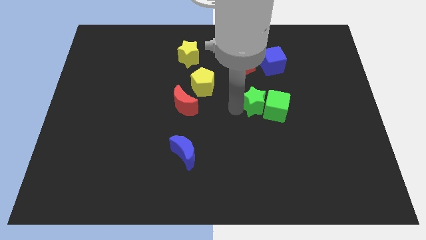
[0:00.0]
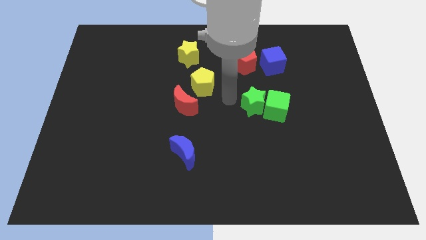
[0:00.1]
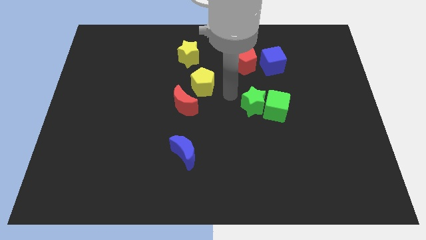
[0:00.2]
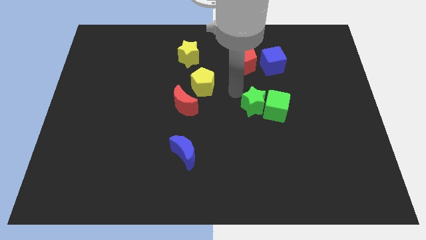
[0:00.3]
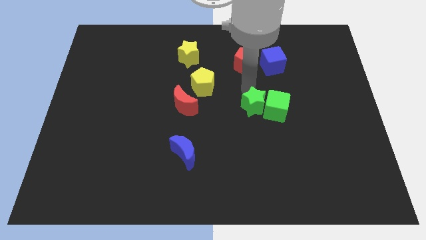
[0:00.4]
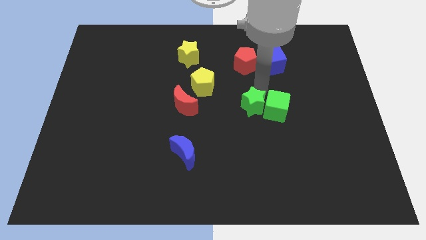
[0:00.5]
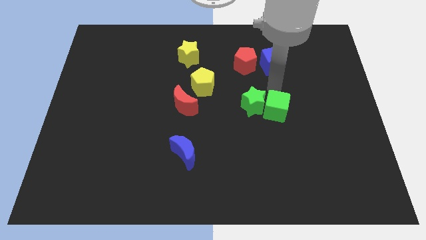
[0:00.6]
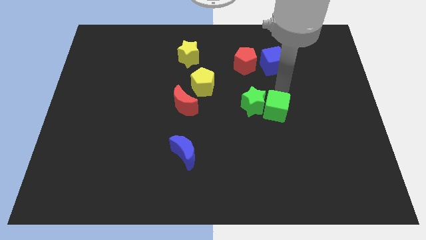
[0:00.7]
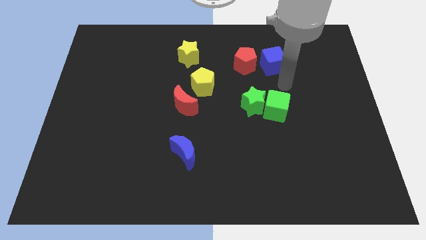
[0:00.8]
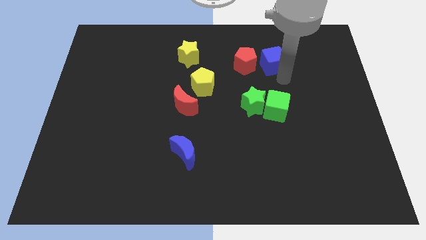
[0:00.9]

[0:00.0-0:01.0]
put your arm at the bottom of blue cube

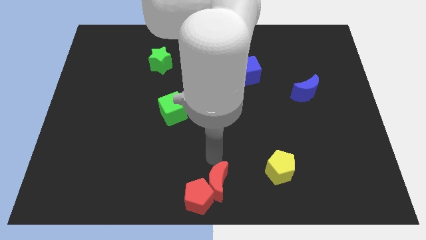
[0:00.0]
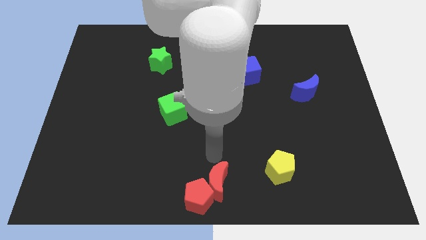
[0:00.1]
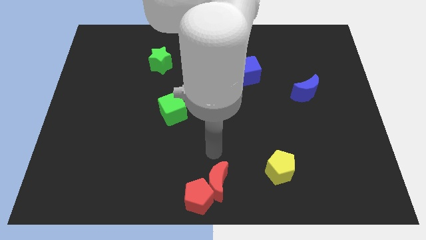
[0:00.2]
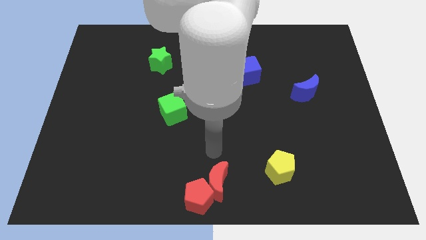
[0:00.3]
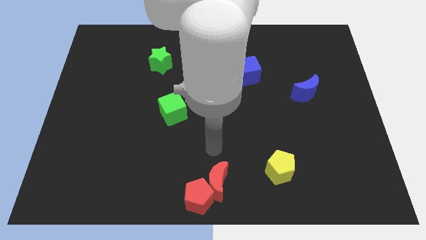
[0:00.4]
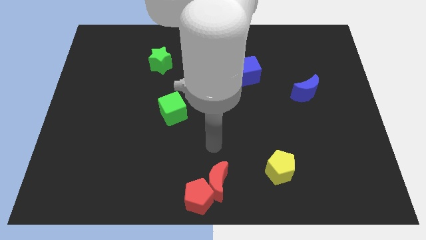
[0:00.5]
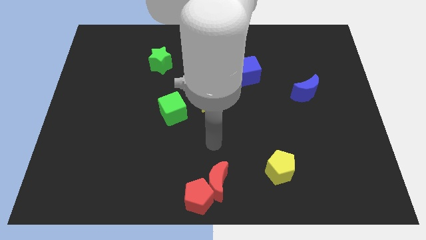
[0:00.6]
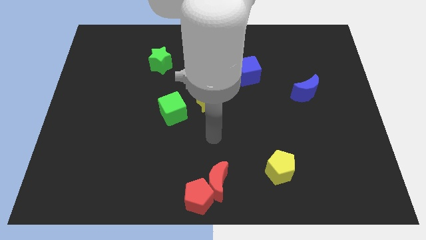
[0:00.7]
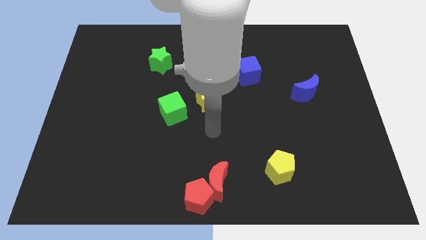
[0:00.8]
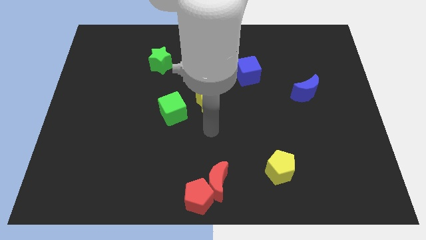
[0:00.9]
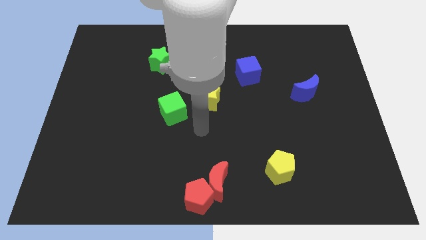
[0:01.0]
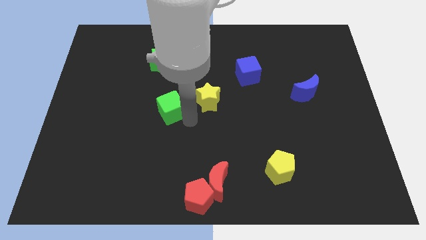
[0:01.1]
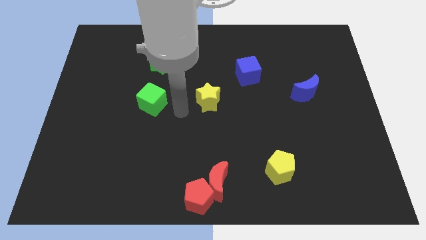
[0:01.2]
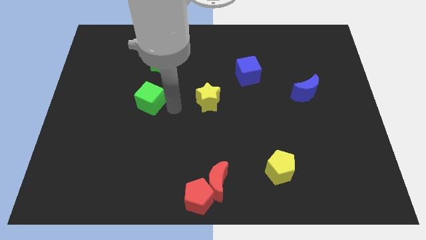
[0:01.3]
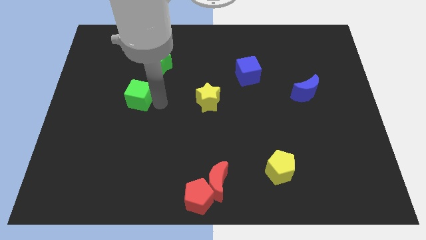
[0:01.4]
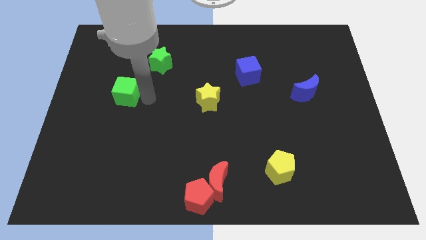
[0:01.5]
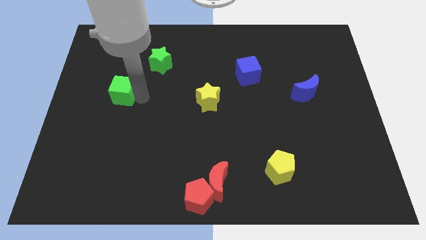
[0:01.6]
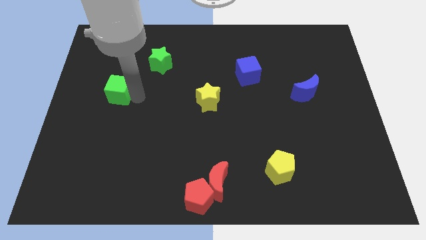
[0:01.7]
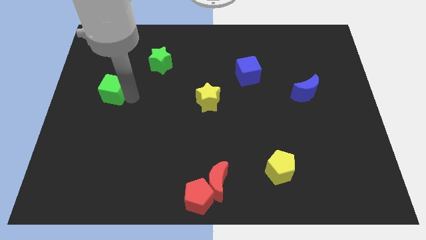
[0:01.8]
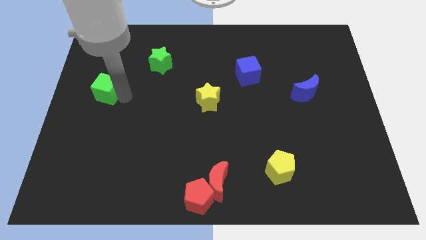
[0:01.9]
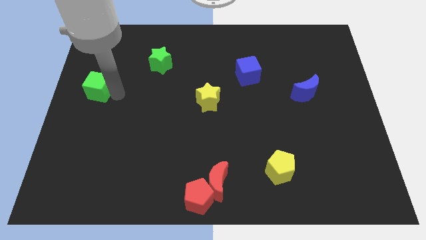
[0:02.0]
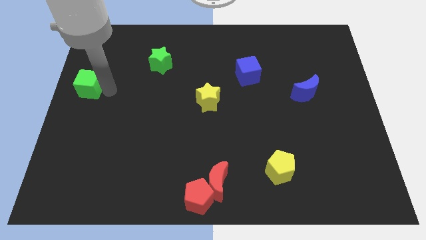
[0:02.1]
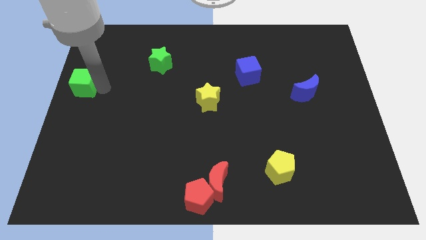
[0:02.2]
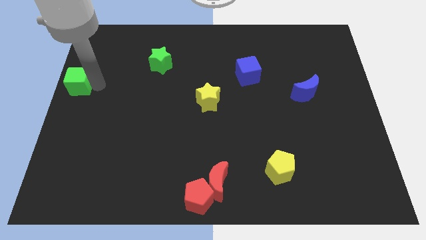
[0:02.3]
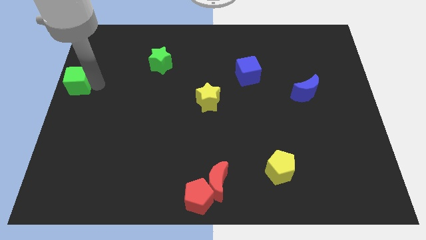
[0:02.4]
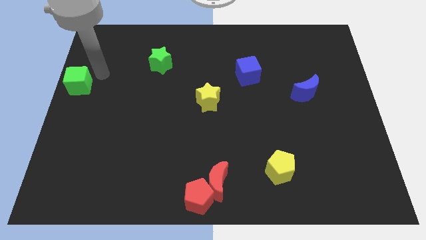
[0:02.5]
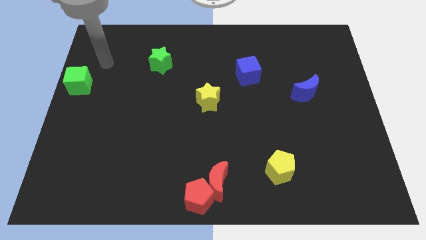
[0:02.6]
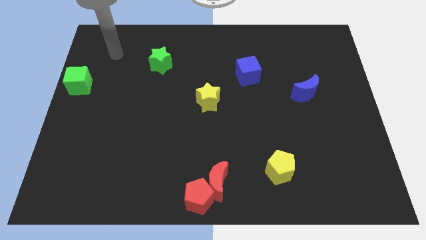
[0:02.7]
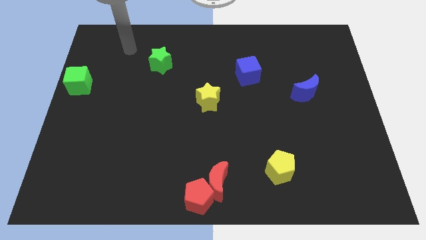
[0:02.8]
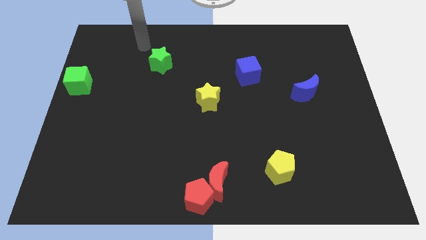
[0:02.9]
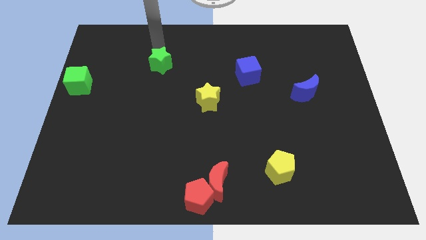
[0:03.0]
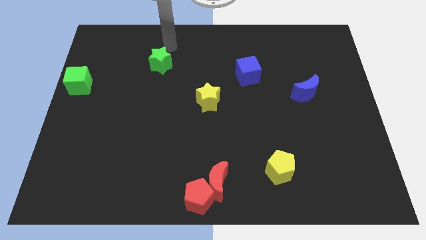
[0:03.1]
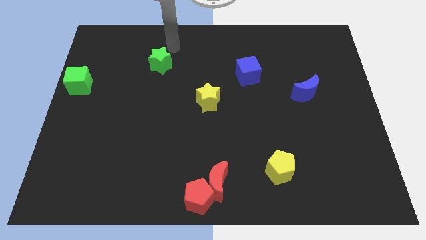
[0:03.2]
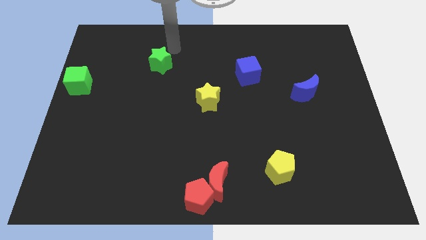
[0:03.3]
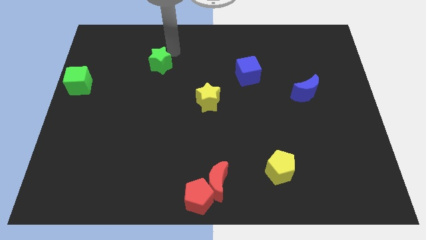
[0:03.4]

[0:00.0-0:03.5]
put the green cube diagonally bottom left to the green star

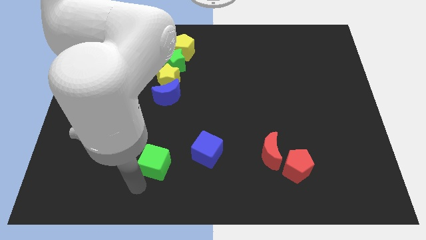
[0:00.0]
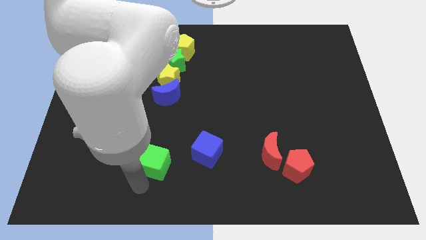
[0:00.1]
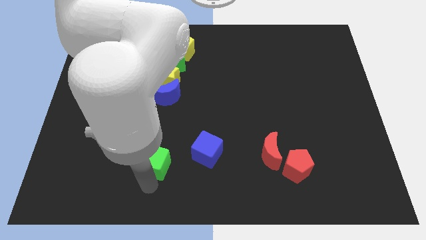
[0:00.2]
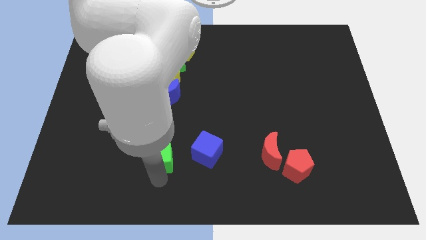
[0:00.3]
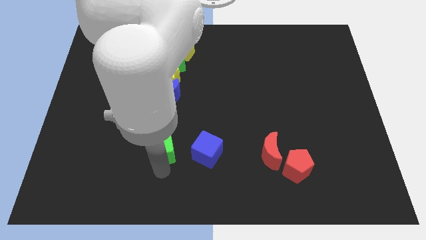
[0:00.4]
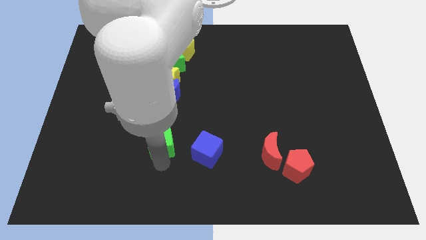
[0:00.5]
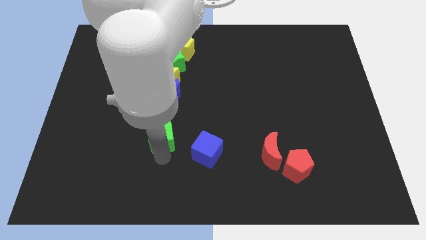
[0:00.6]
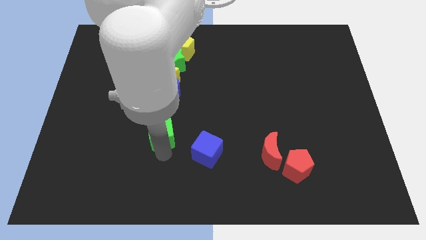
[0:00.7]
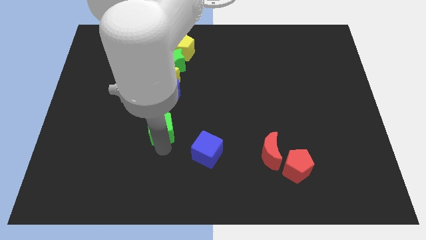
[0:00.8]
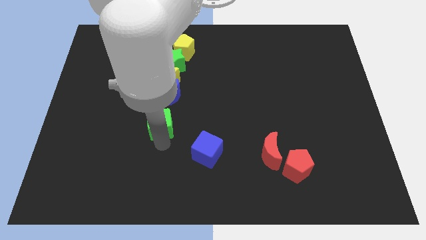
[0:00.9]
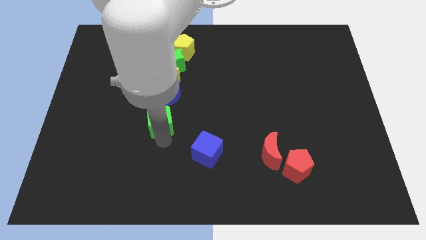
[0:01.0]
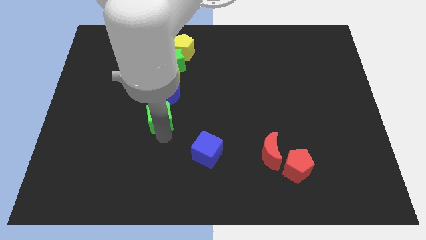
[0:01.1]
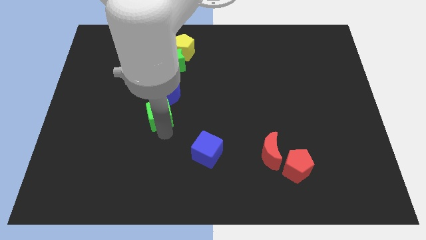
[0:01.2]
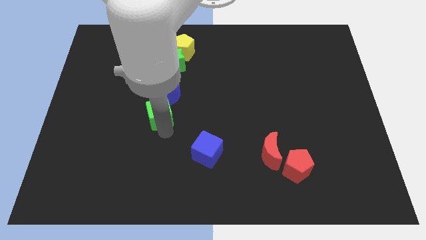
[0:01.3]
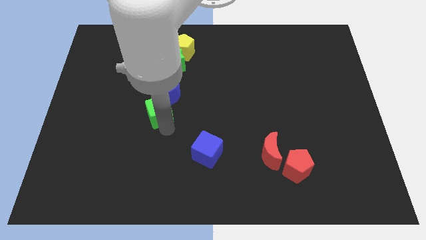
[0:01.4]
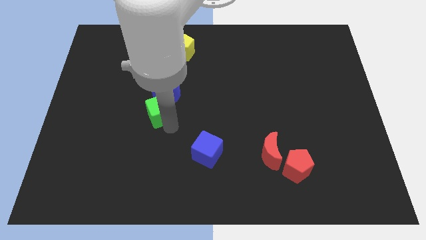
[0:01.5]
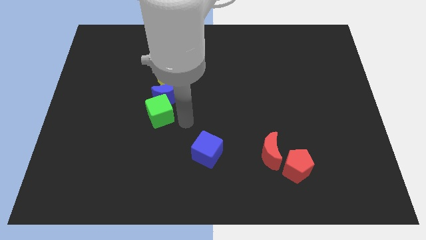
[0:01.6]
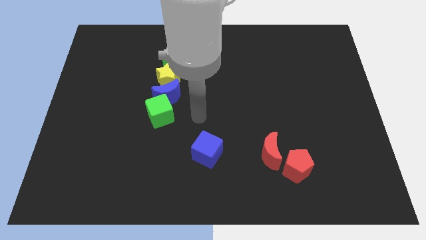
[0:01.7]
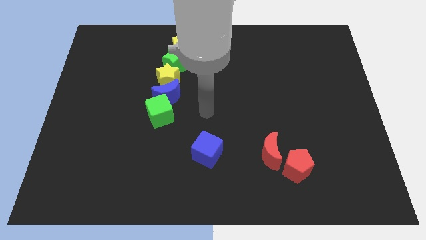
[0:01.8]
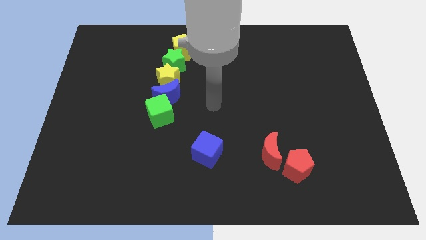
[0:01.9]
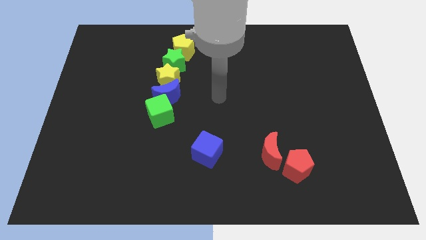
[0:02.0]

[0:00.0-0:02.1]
move green cube into blue moon

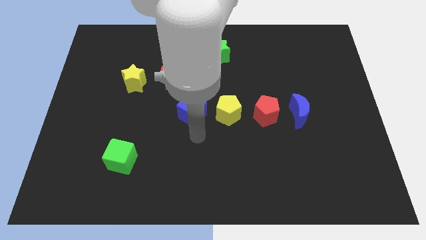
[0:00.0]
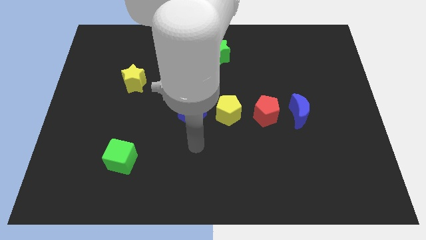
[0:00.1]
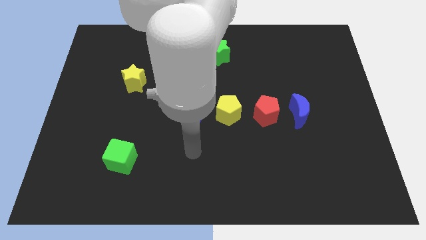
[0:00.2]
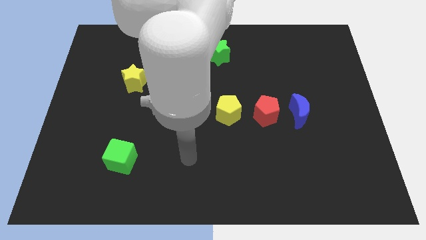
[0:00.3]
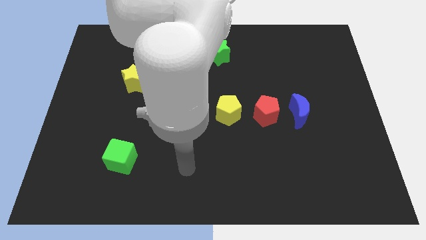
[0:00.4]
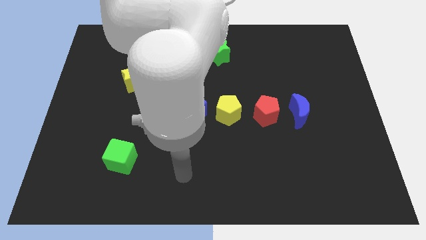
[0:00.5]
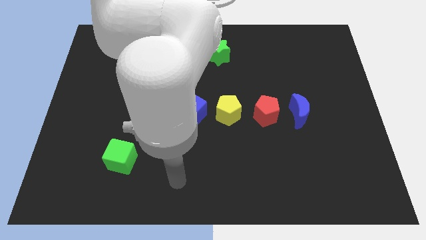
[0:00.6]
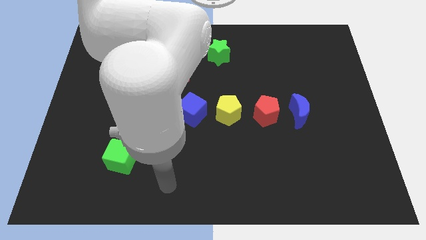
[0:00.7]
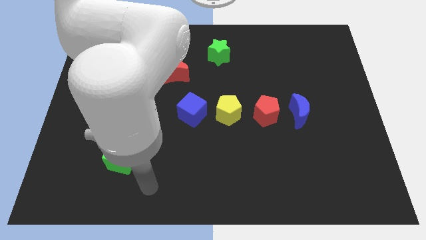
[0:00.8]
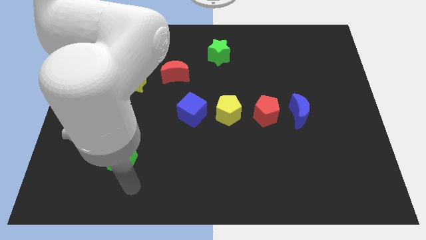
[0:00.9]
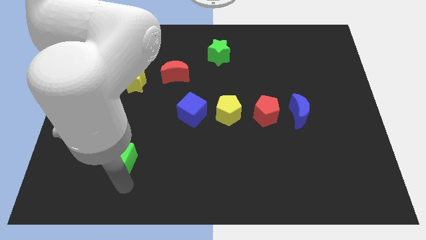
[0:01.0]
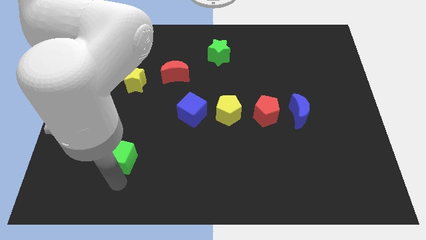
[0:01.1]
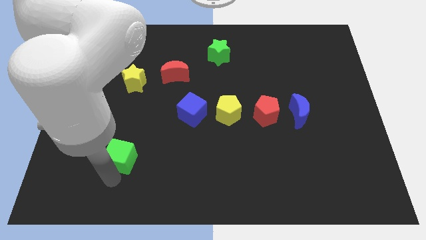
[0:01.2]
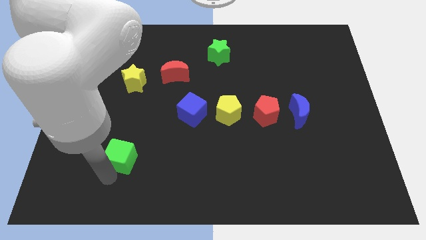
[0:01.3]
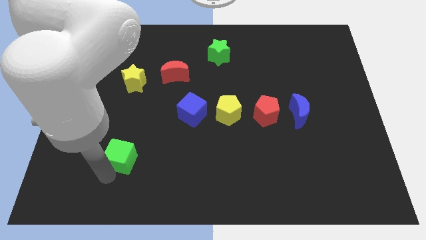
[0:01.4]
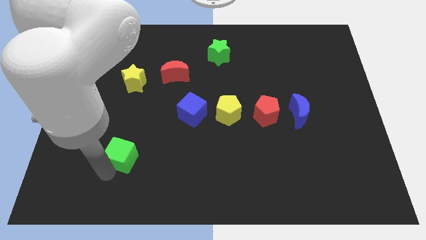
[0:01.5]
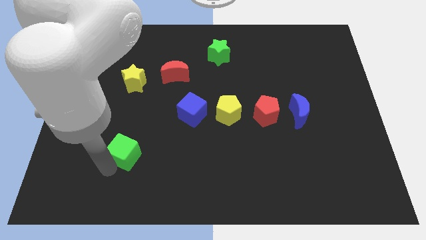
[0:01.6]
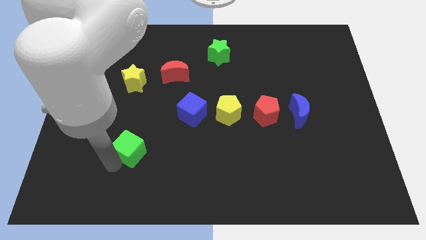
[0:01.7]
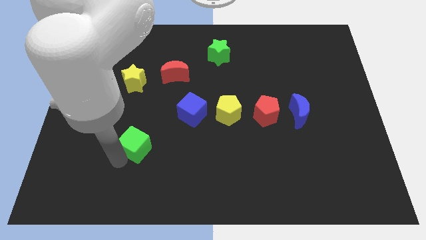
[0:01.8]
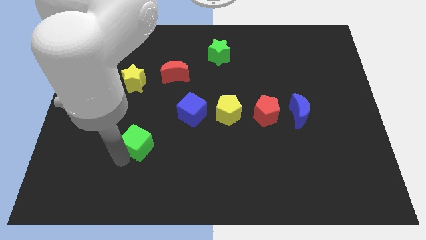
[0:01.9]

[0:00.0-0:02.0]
place the arm into the green cube

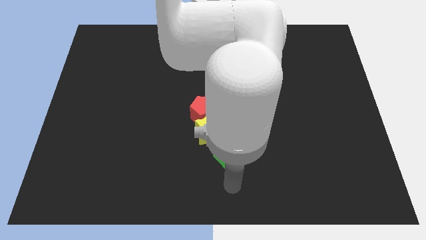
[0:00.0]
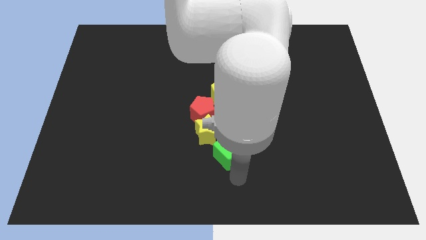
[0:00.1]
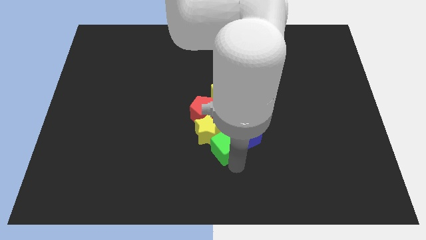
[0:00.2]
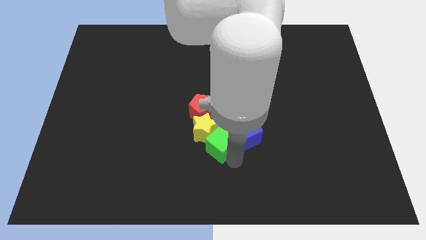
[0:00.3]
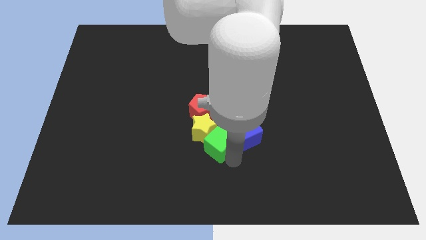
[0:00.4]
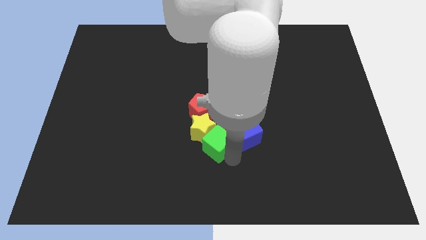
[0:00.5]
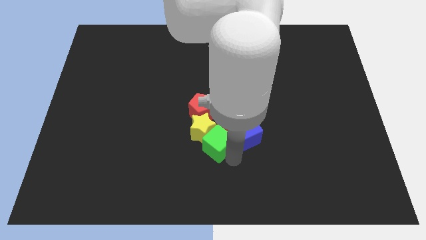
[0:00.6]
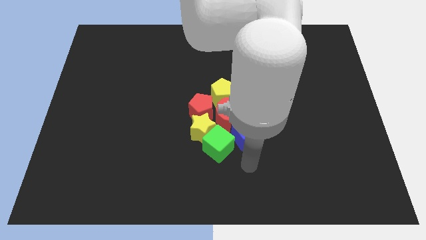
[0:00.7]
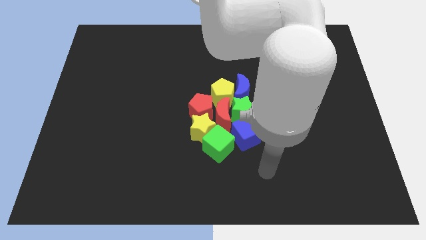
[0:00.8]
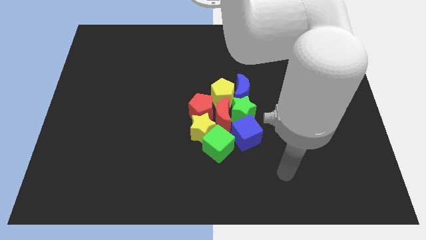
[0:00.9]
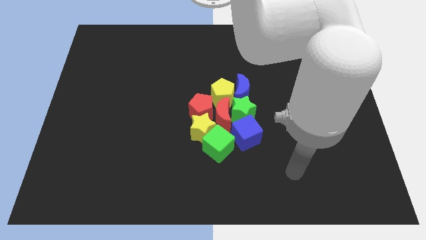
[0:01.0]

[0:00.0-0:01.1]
push the group of blocks slightly up
